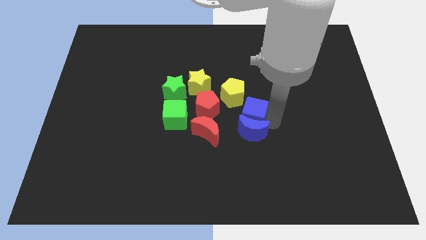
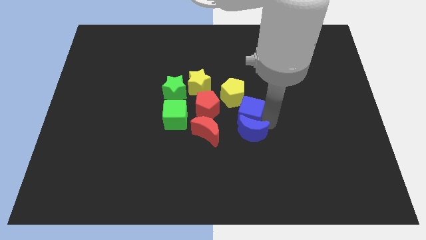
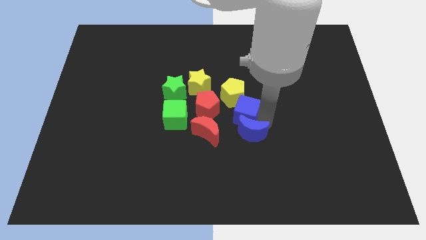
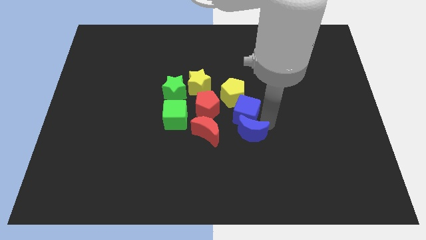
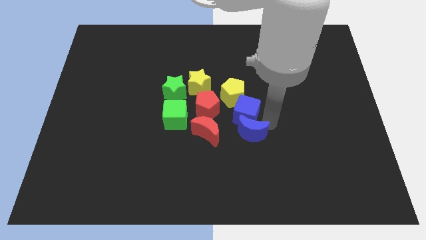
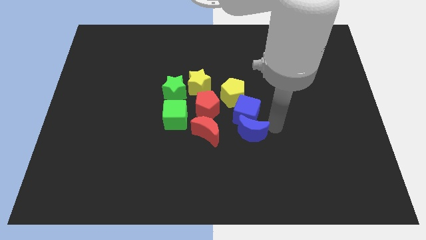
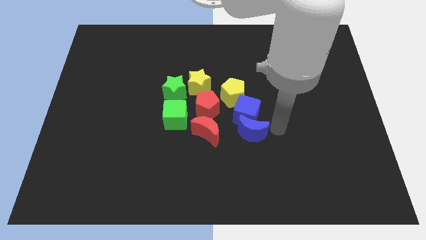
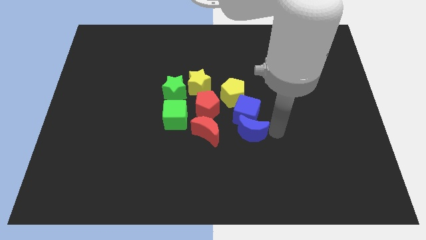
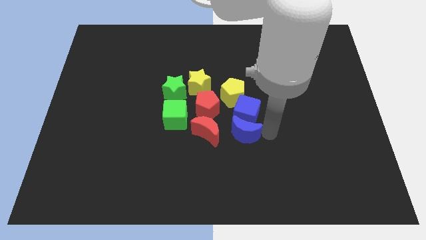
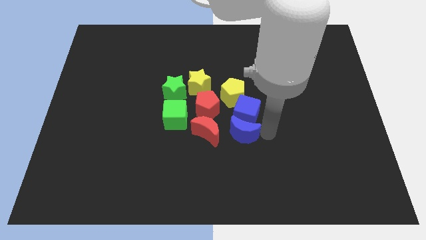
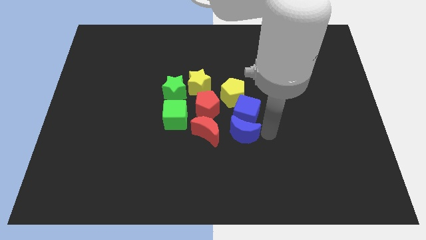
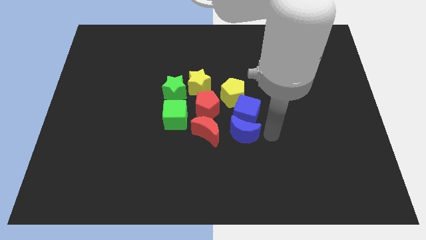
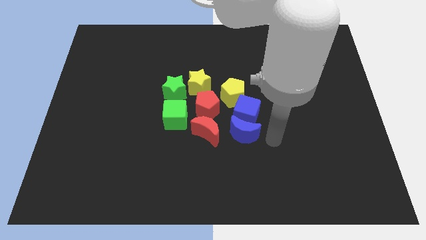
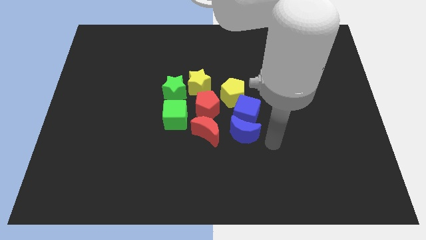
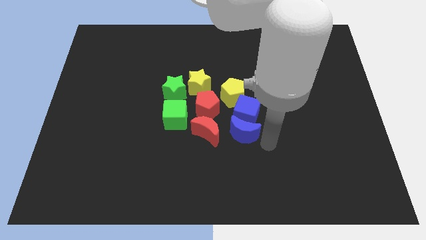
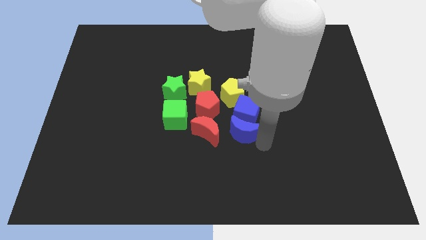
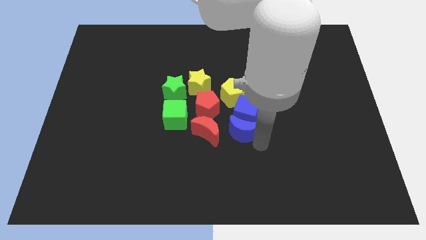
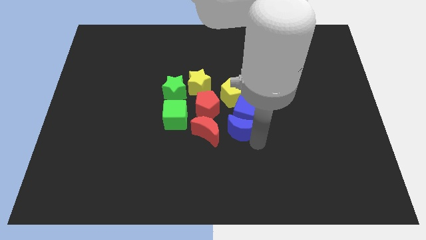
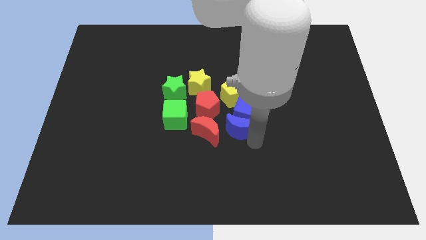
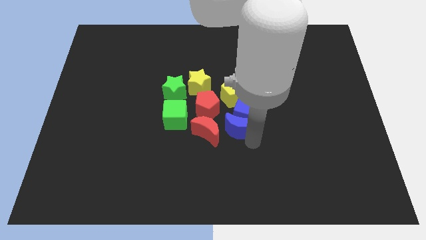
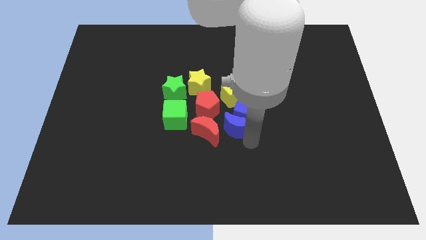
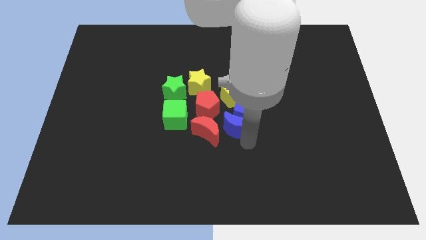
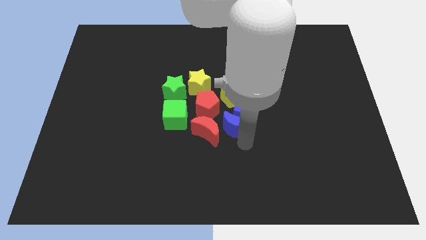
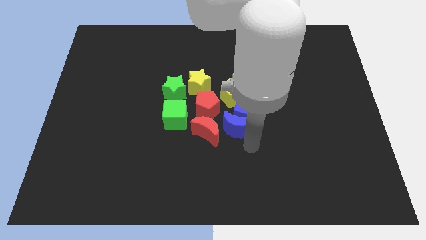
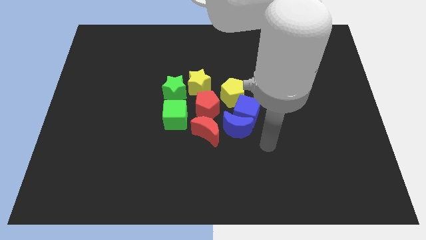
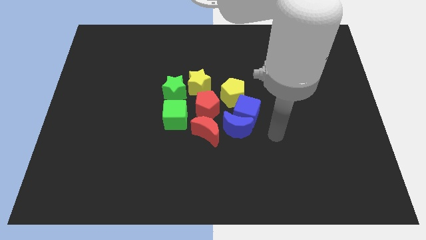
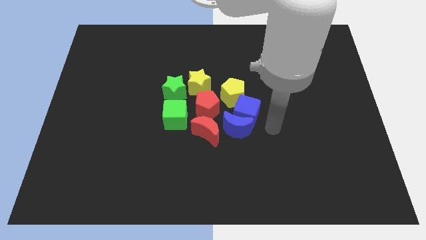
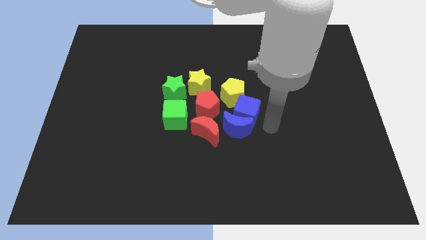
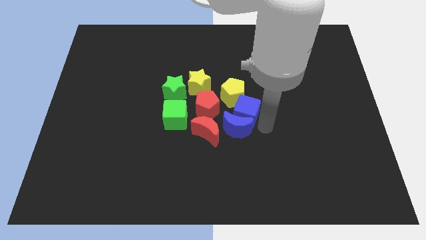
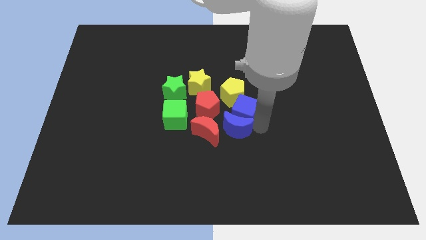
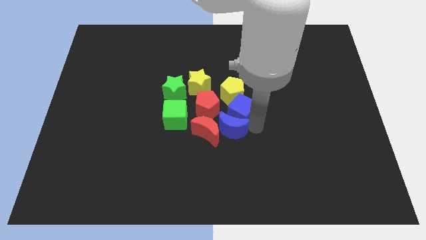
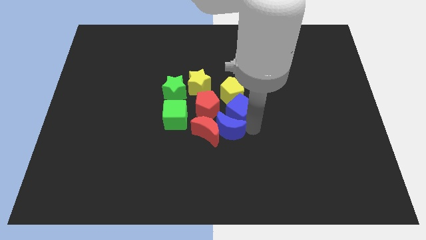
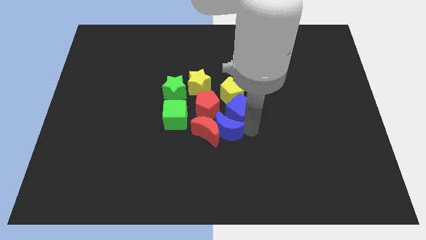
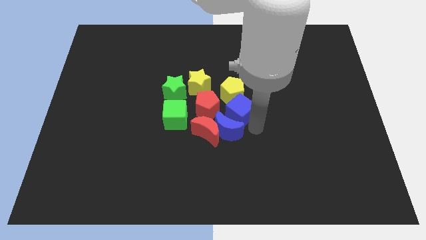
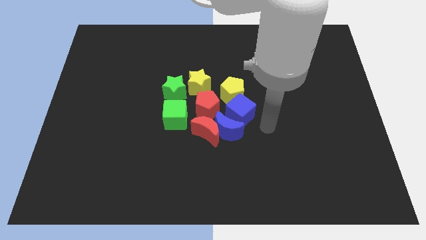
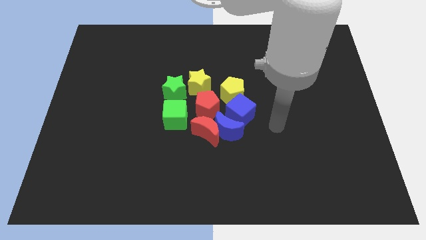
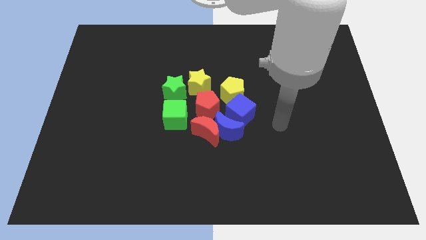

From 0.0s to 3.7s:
push the blue moon into the group of blocks

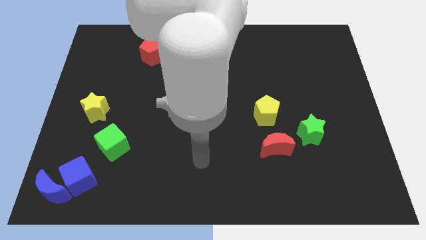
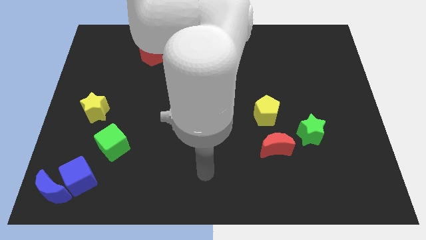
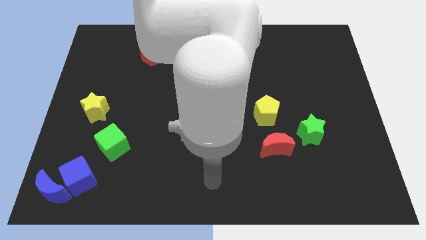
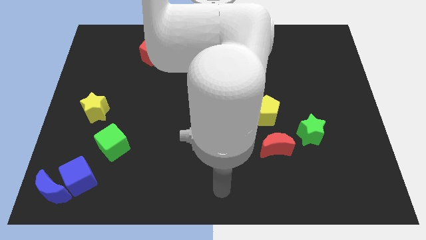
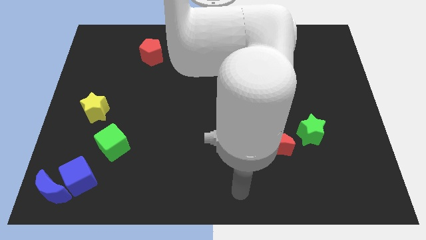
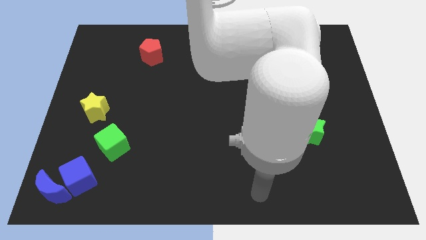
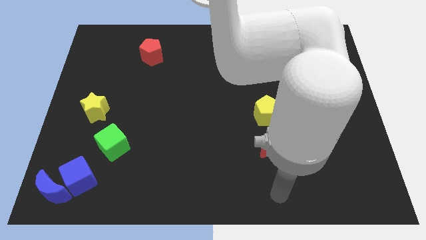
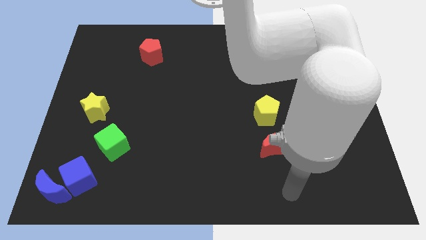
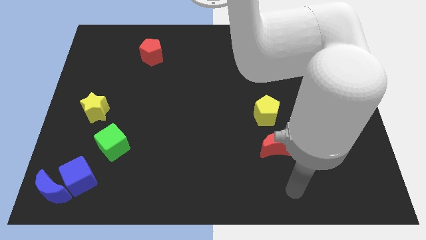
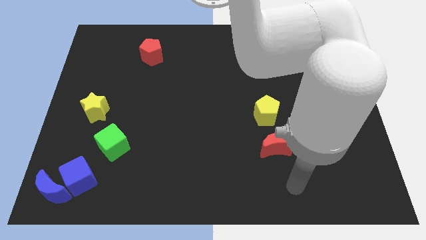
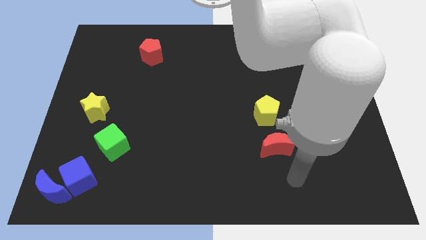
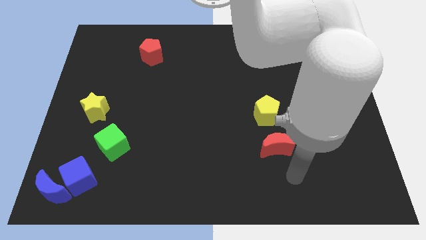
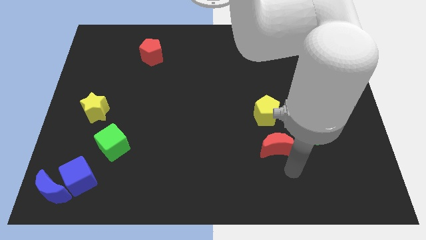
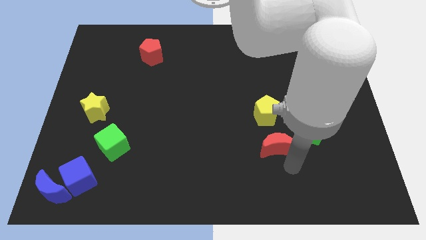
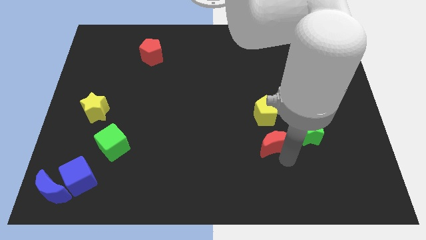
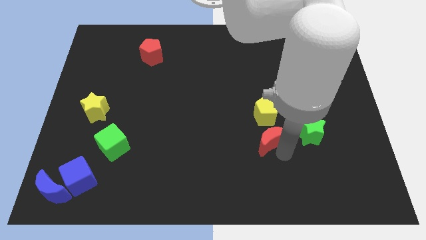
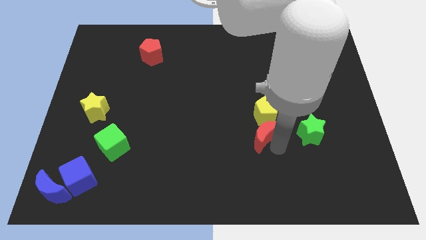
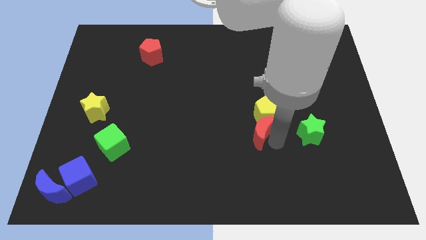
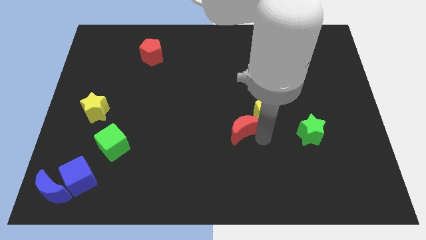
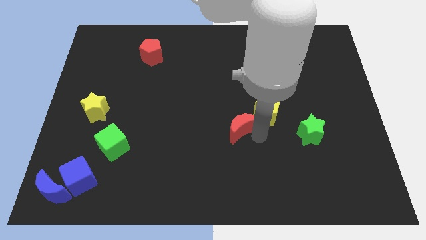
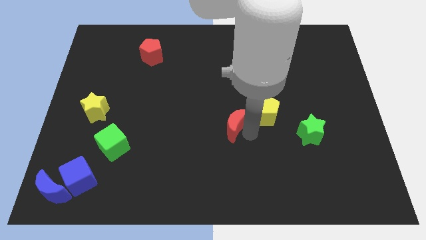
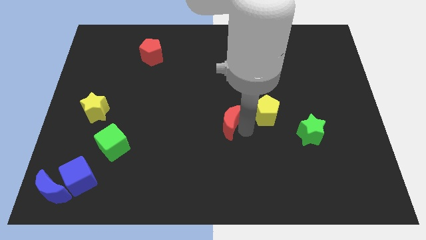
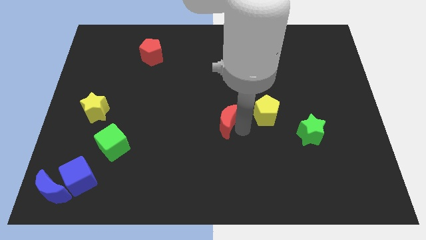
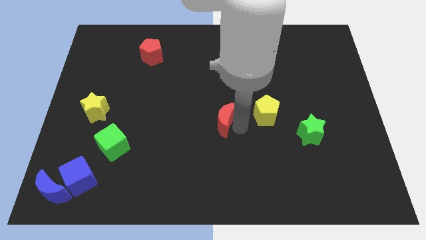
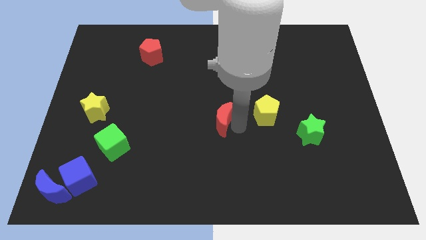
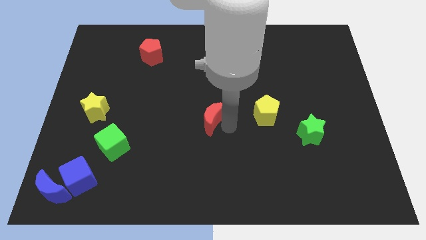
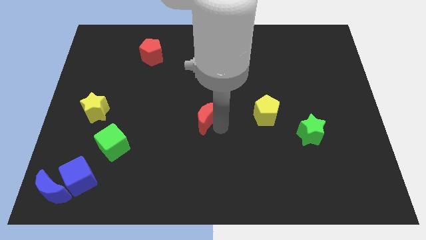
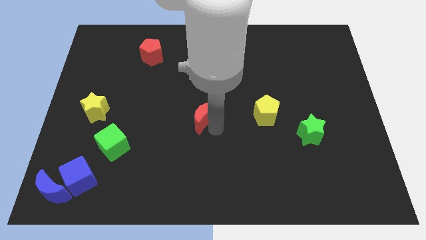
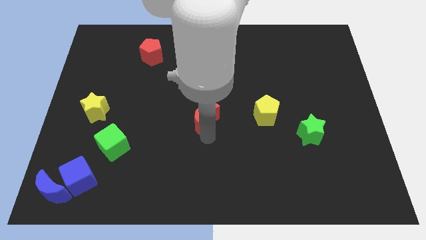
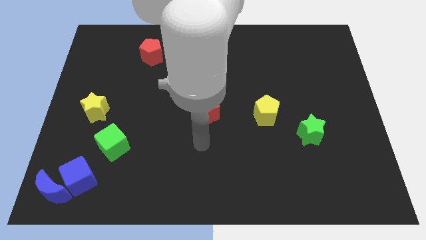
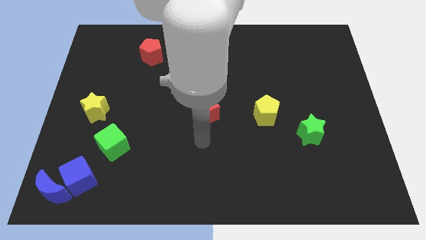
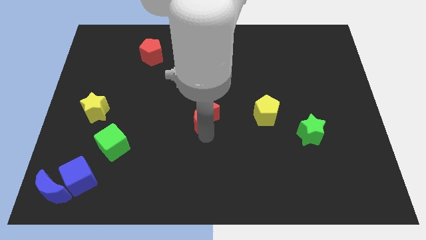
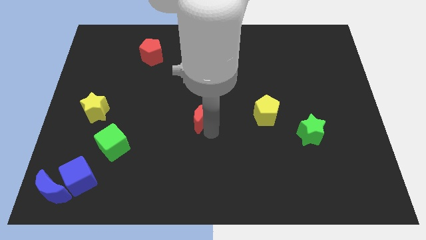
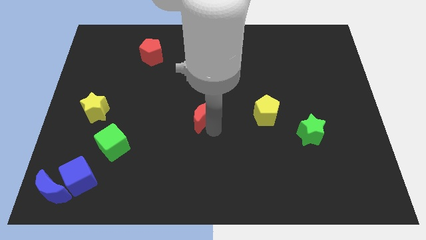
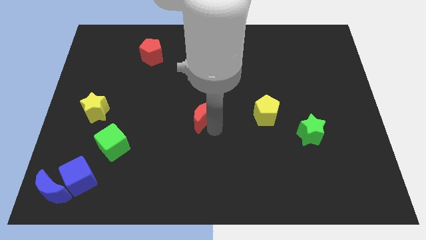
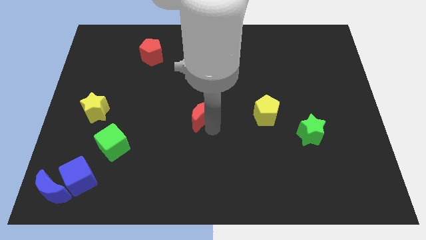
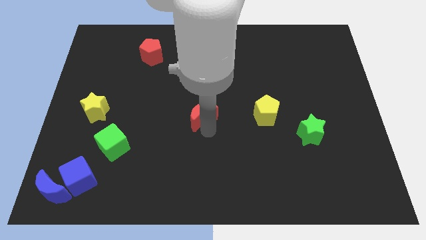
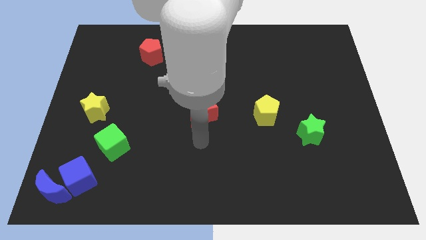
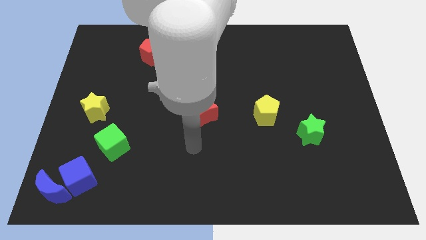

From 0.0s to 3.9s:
move the red moon horizontally left to the yellow pentagon

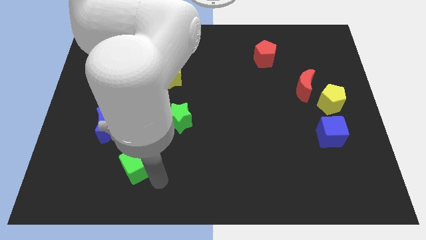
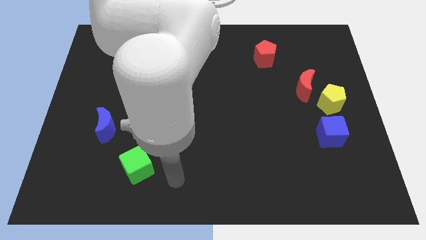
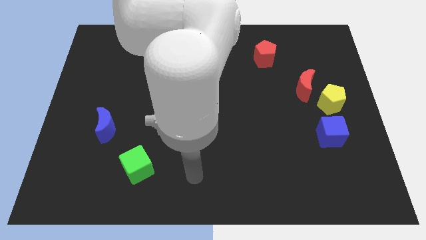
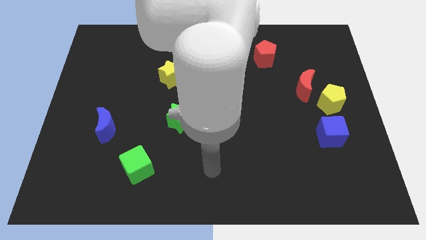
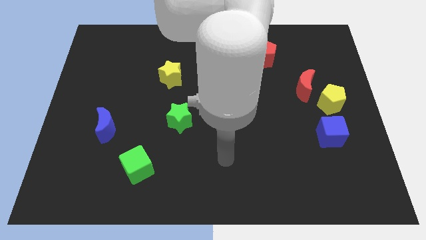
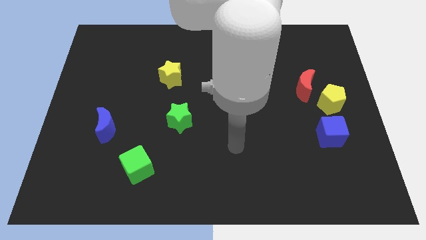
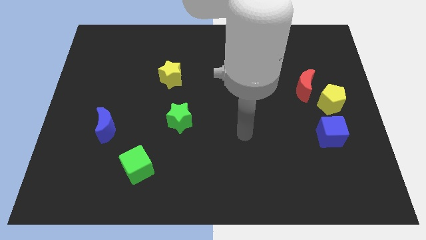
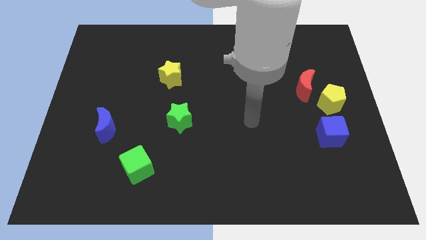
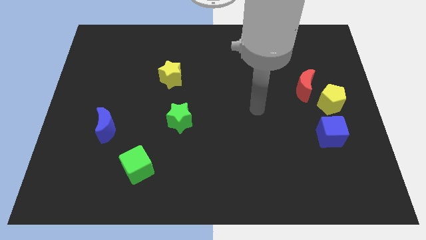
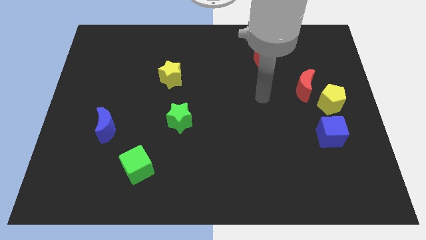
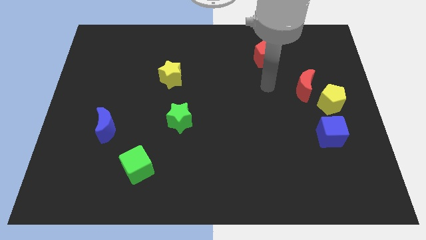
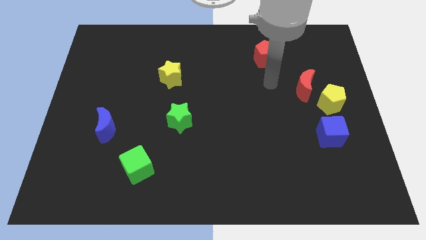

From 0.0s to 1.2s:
go away from the green cube
